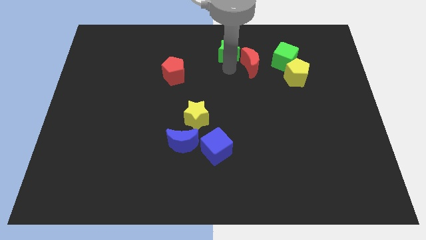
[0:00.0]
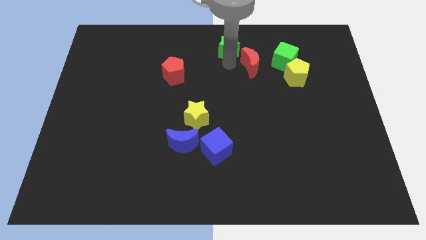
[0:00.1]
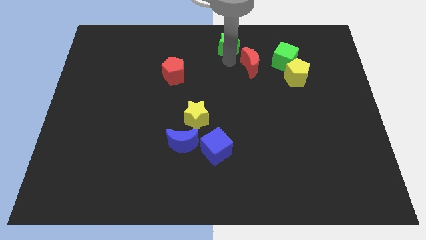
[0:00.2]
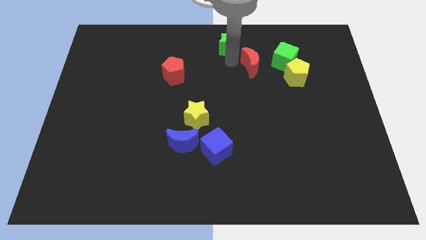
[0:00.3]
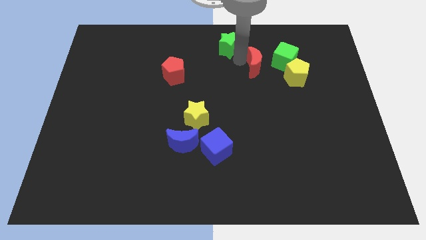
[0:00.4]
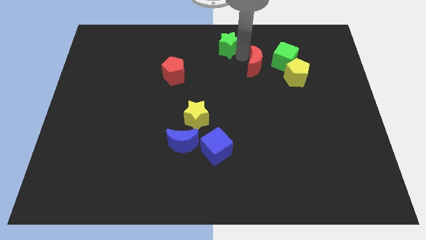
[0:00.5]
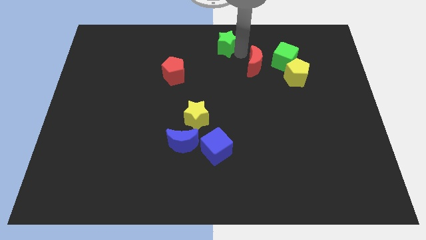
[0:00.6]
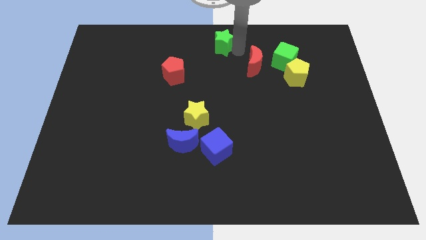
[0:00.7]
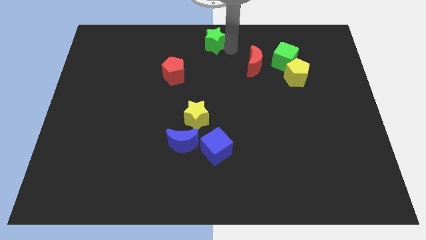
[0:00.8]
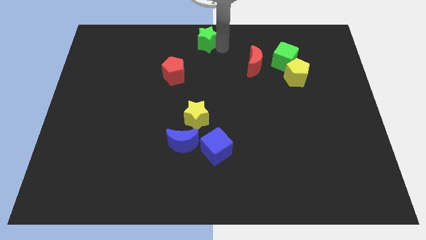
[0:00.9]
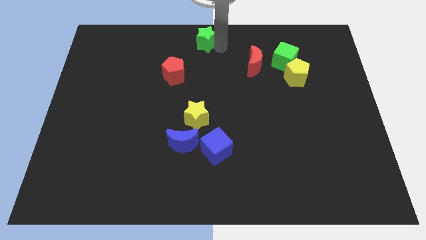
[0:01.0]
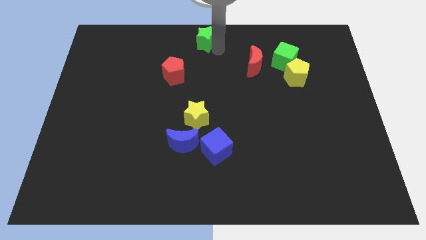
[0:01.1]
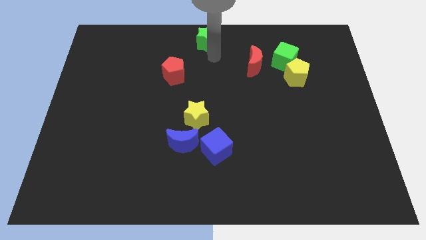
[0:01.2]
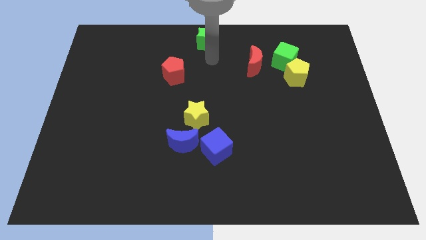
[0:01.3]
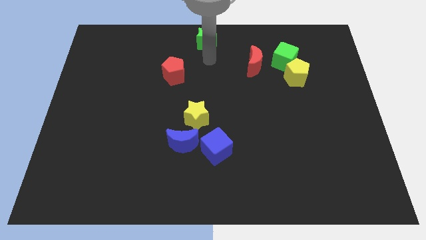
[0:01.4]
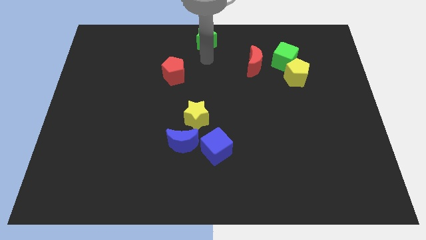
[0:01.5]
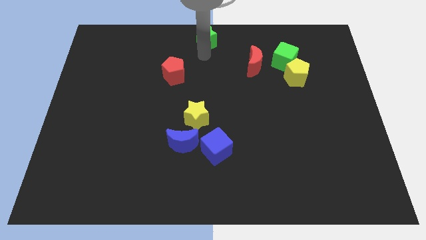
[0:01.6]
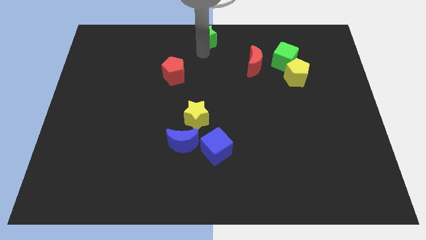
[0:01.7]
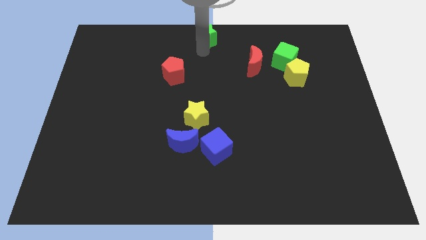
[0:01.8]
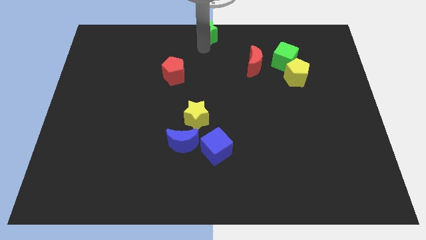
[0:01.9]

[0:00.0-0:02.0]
place green star on top center

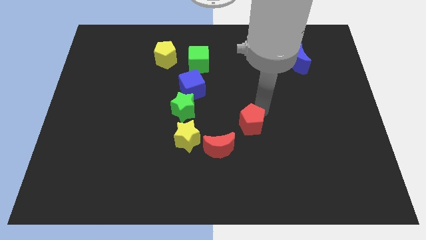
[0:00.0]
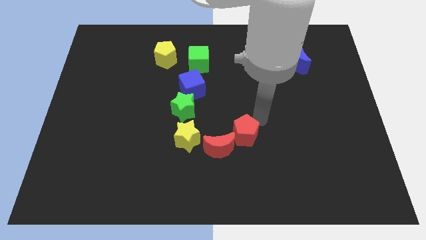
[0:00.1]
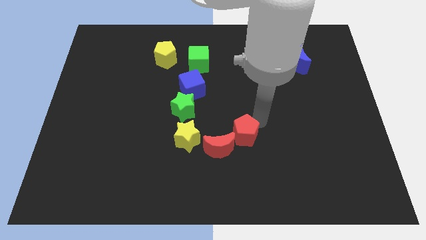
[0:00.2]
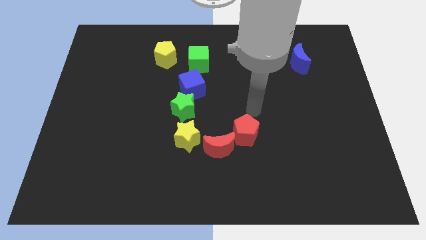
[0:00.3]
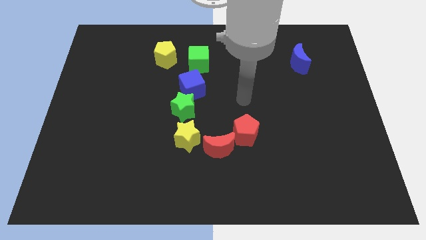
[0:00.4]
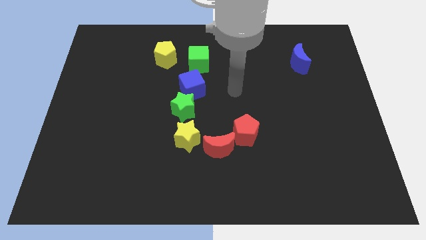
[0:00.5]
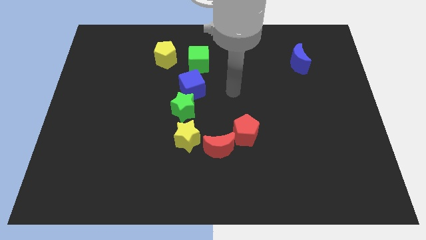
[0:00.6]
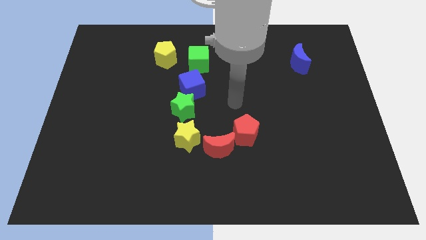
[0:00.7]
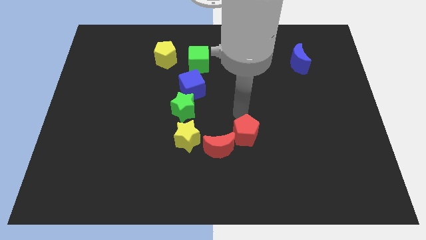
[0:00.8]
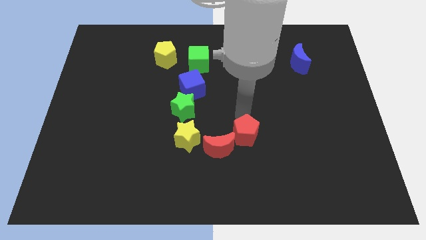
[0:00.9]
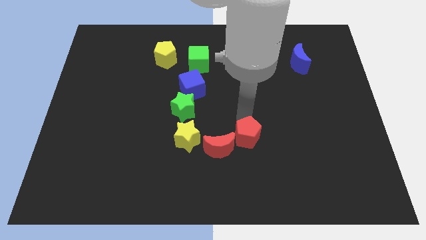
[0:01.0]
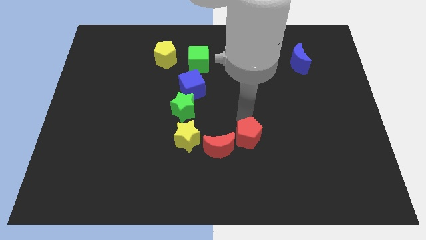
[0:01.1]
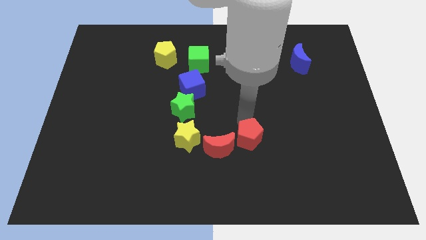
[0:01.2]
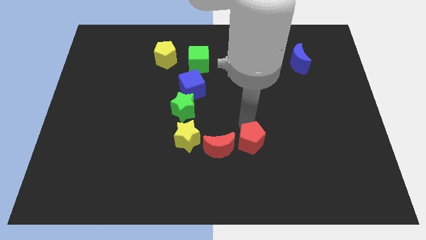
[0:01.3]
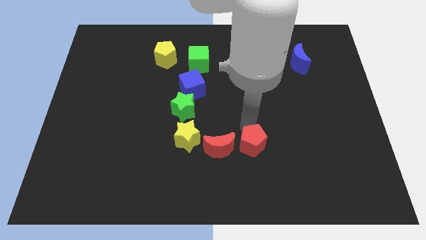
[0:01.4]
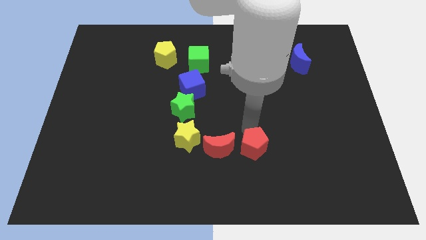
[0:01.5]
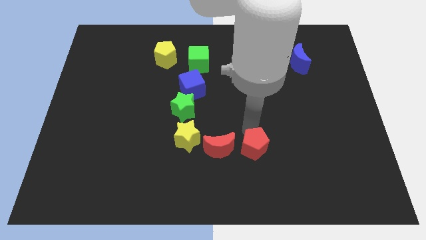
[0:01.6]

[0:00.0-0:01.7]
place the red pentagon to the right of the red moon

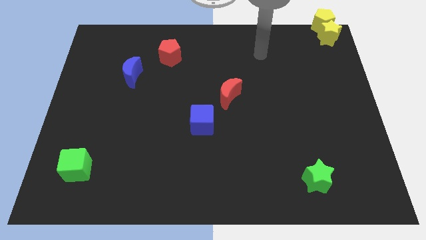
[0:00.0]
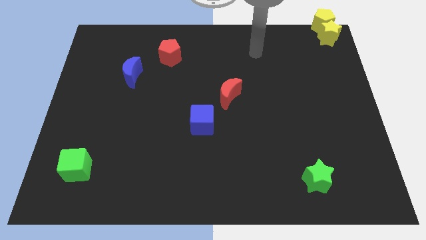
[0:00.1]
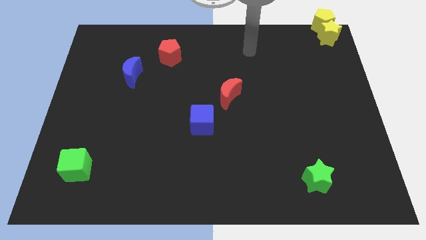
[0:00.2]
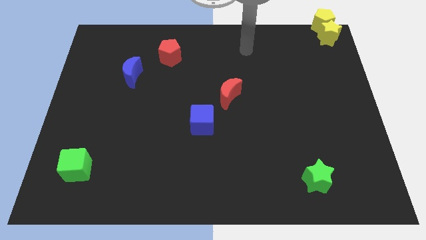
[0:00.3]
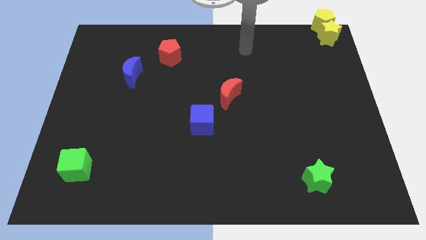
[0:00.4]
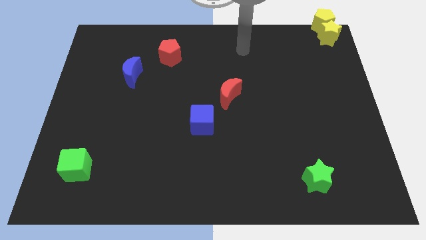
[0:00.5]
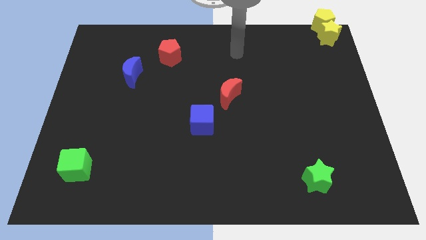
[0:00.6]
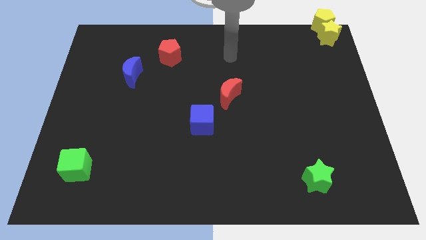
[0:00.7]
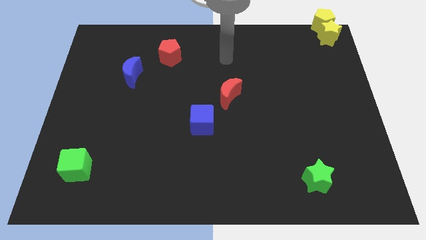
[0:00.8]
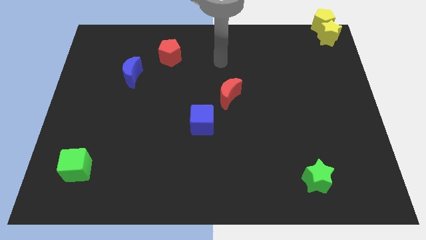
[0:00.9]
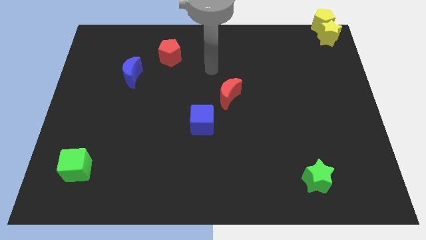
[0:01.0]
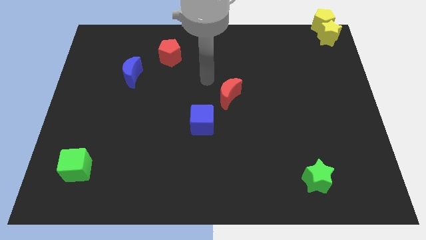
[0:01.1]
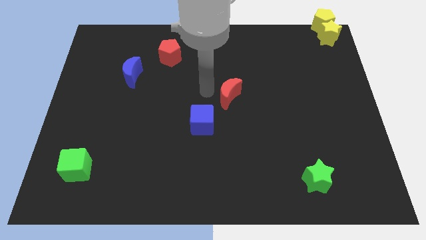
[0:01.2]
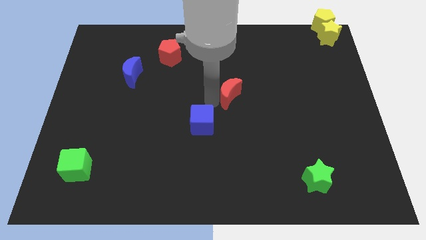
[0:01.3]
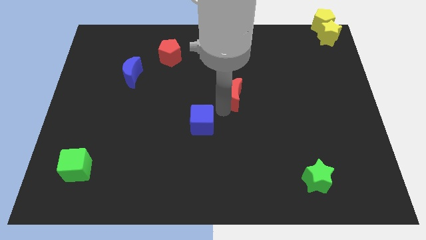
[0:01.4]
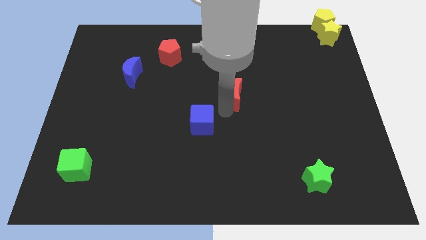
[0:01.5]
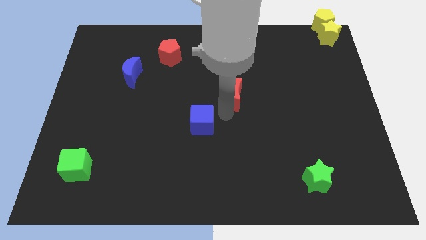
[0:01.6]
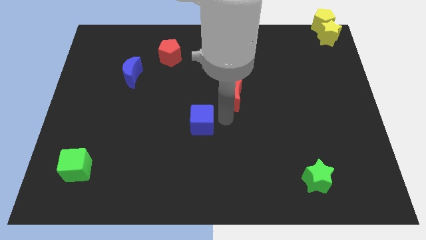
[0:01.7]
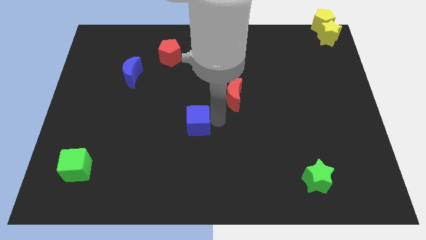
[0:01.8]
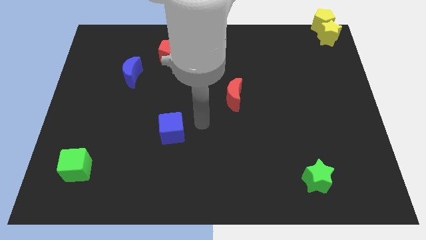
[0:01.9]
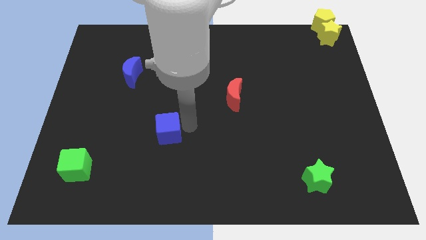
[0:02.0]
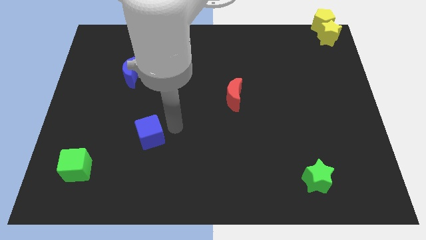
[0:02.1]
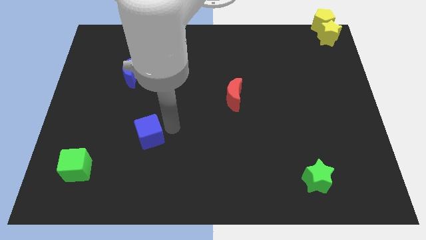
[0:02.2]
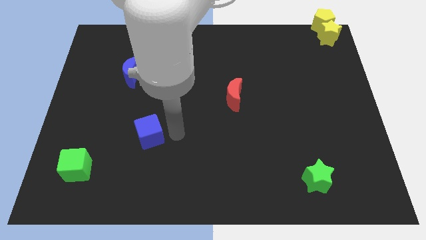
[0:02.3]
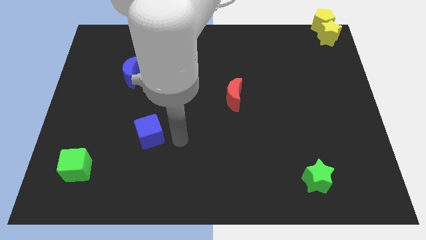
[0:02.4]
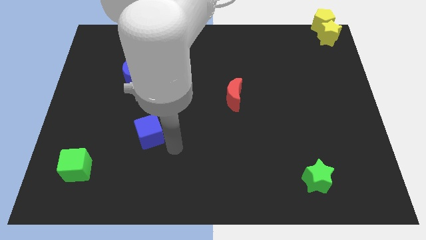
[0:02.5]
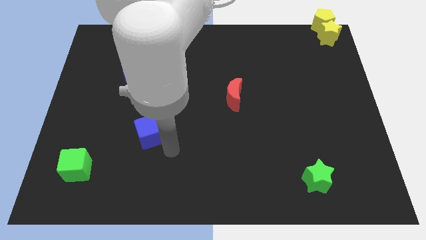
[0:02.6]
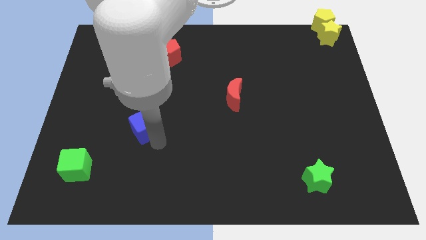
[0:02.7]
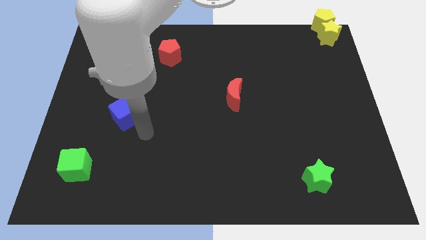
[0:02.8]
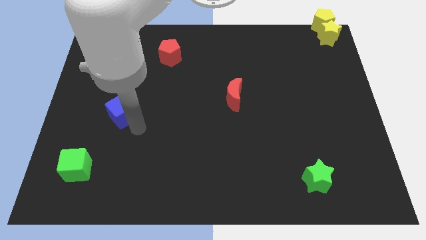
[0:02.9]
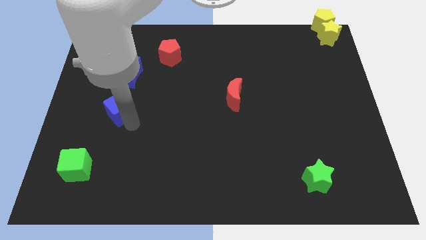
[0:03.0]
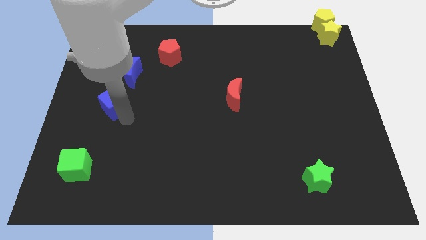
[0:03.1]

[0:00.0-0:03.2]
place the blue cube in between the green cube and blue moon

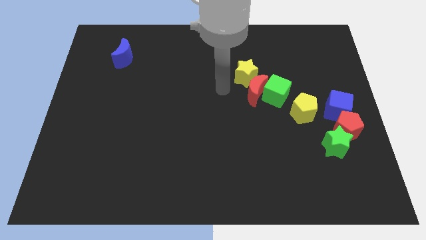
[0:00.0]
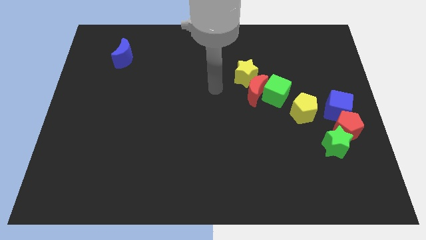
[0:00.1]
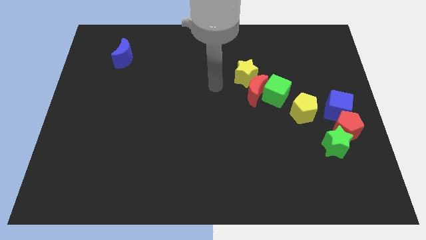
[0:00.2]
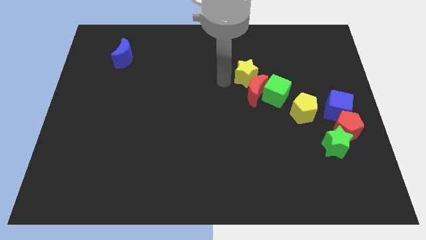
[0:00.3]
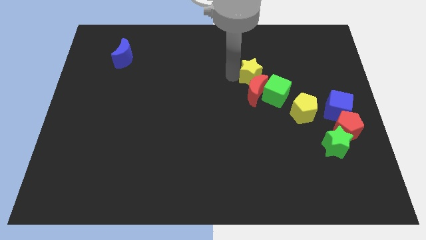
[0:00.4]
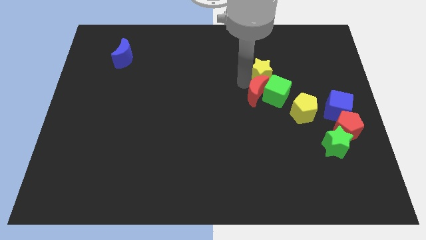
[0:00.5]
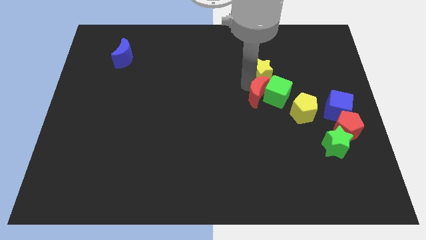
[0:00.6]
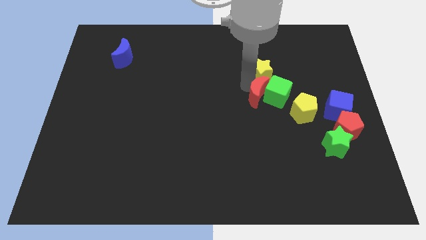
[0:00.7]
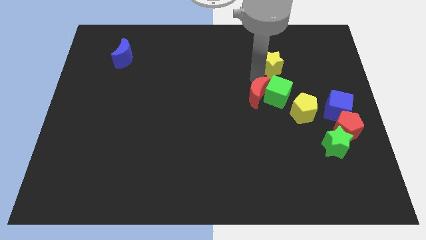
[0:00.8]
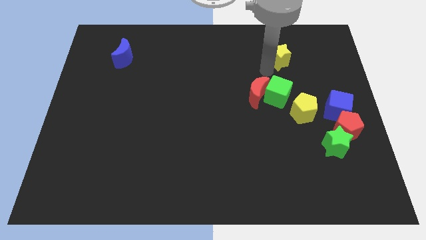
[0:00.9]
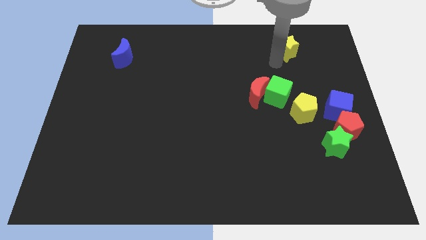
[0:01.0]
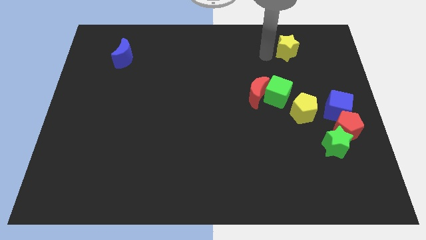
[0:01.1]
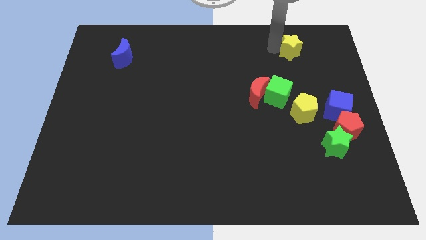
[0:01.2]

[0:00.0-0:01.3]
separate the yellow star from red moon

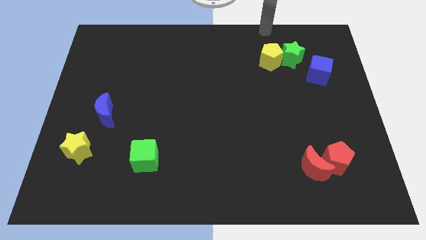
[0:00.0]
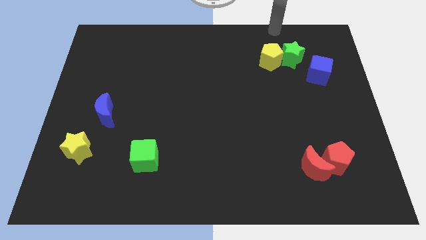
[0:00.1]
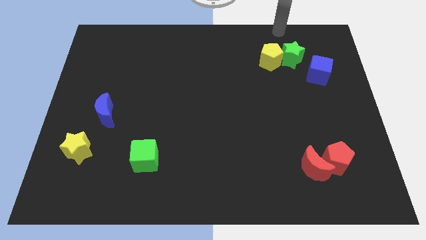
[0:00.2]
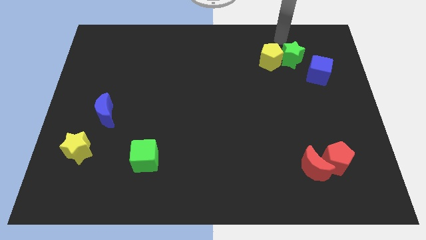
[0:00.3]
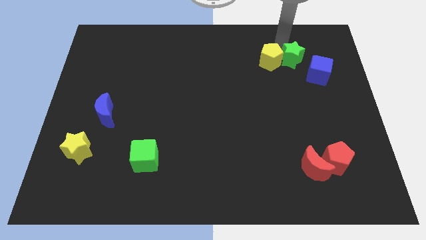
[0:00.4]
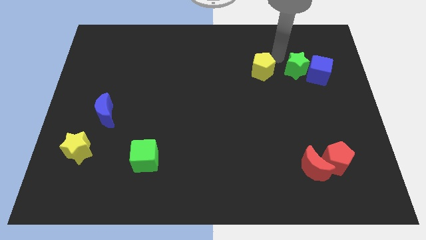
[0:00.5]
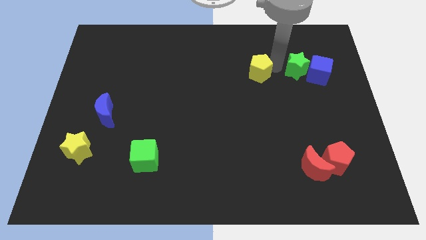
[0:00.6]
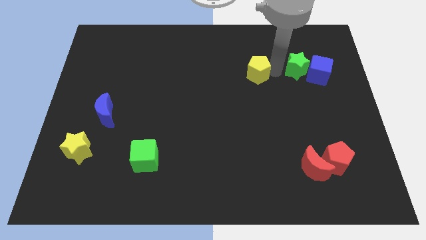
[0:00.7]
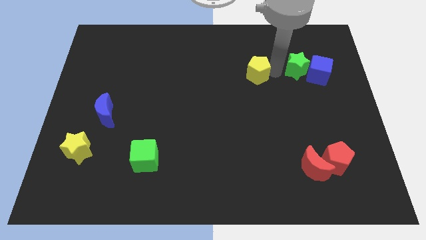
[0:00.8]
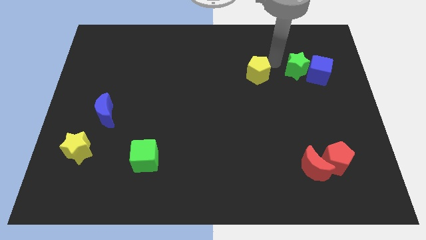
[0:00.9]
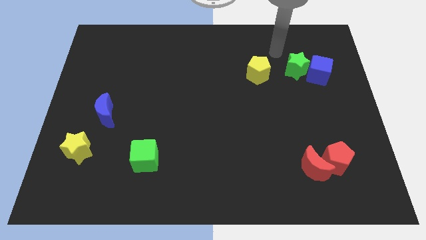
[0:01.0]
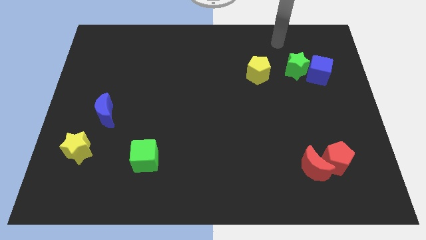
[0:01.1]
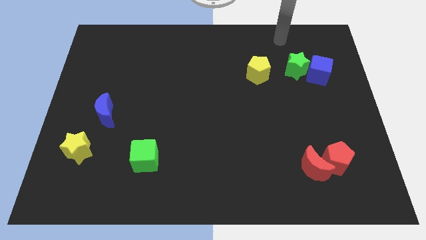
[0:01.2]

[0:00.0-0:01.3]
separate yellow pentagon and green star
